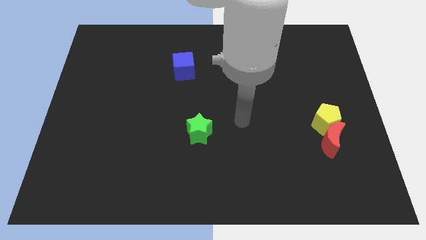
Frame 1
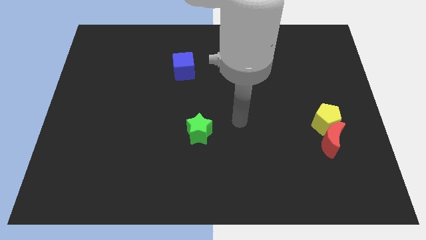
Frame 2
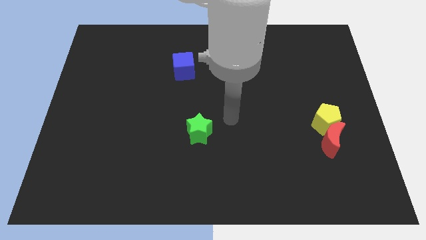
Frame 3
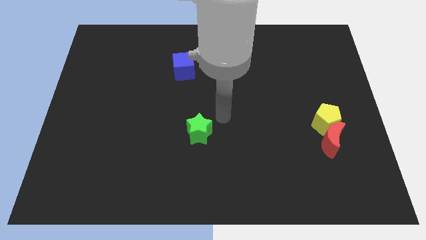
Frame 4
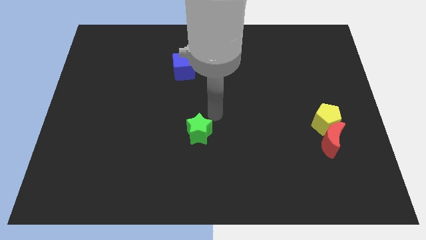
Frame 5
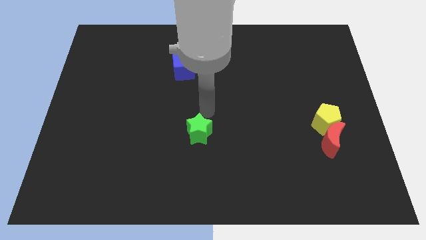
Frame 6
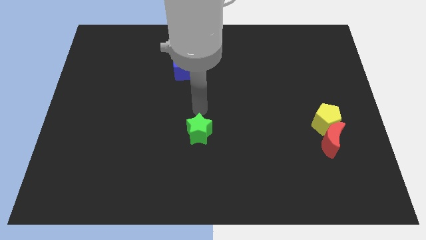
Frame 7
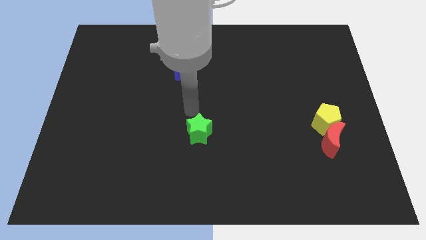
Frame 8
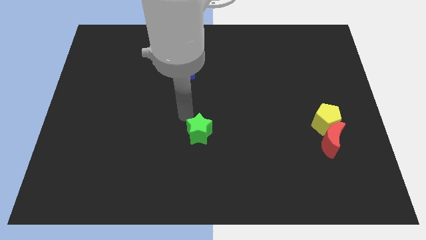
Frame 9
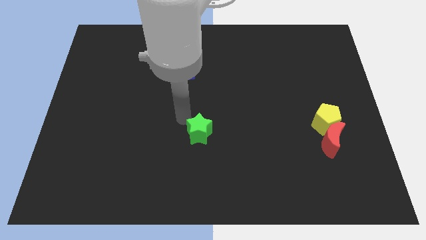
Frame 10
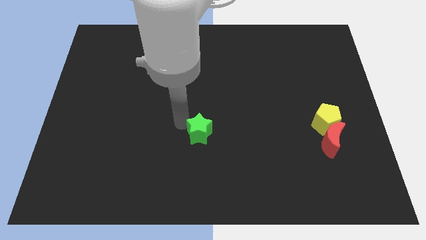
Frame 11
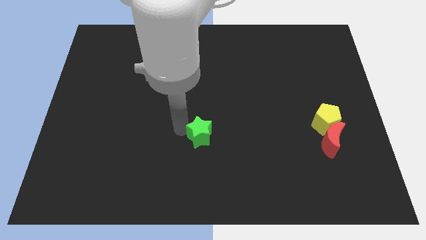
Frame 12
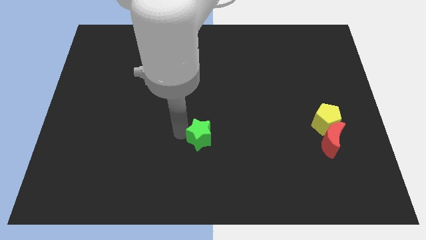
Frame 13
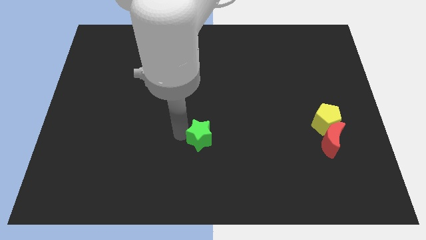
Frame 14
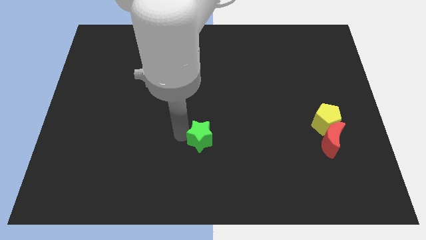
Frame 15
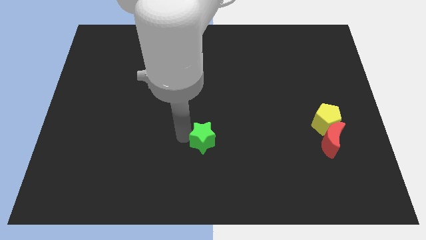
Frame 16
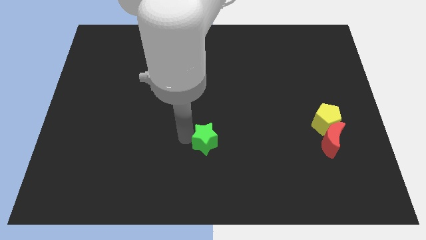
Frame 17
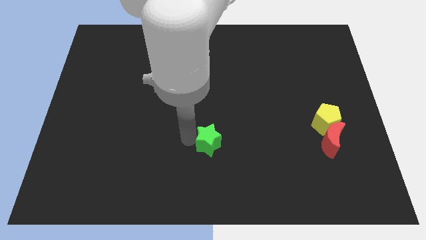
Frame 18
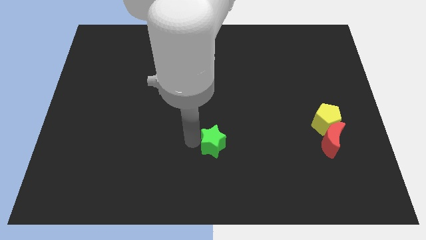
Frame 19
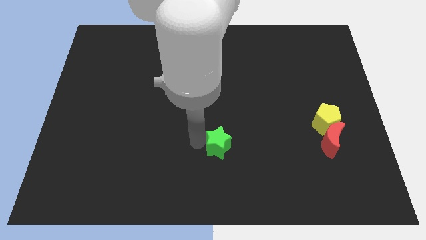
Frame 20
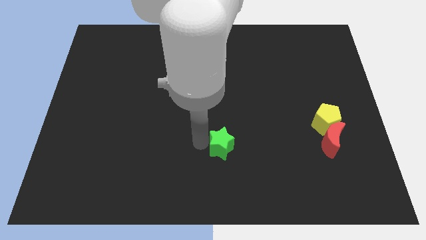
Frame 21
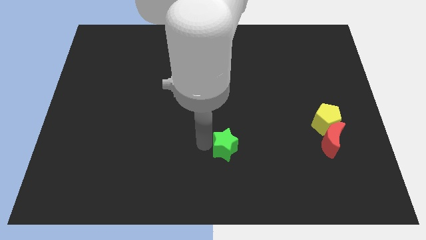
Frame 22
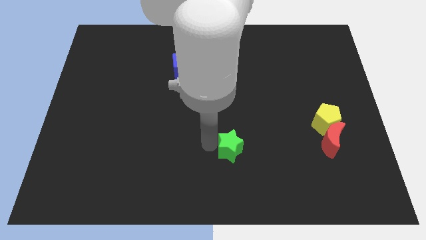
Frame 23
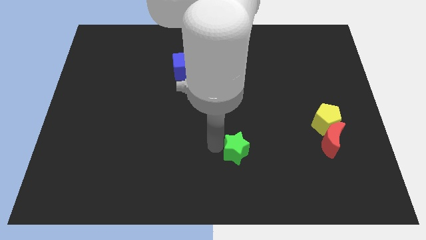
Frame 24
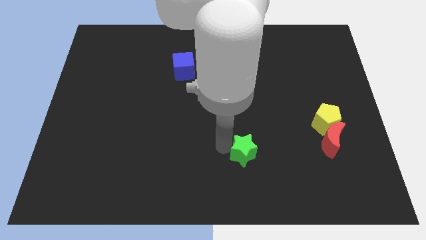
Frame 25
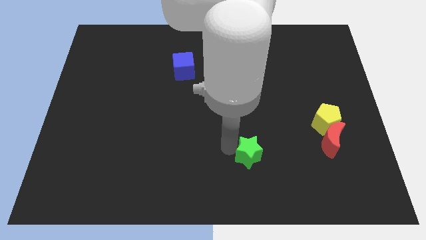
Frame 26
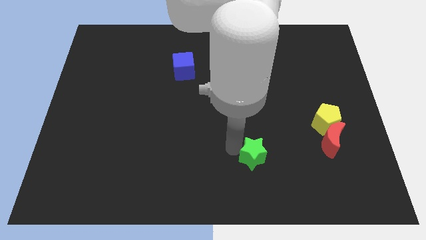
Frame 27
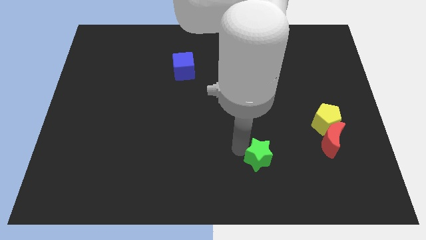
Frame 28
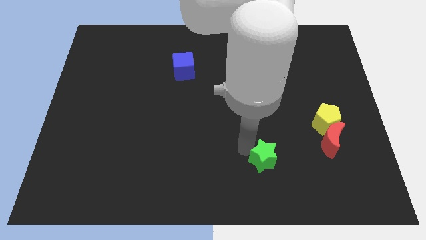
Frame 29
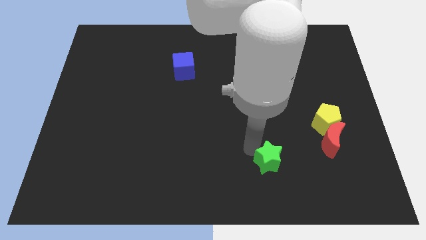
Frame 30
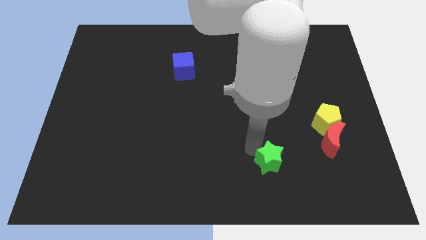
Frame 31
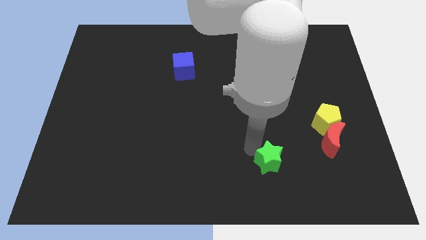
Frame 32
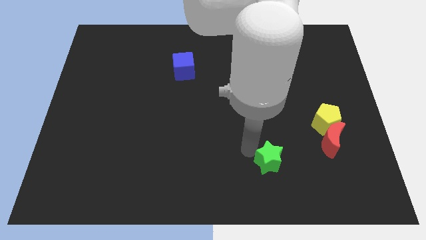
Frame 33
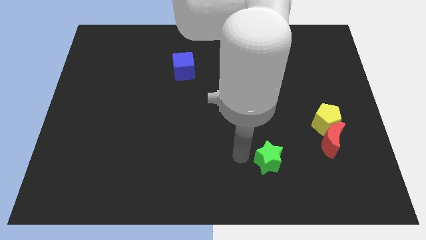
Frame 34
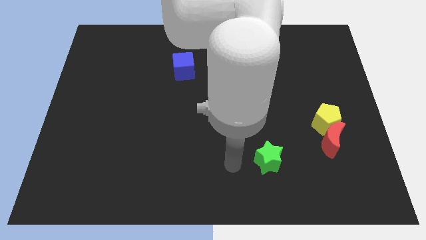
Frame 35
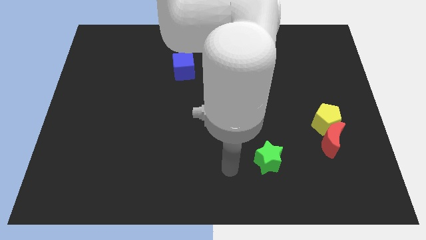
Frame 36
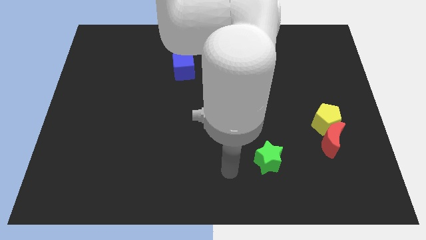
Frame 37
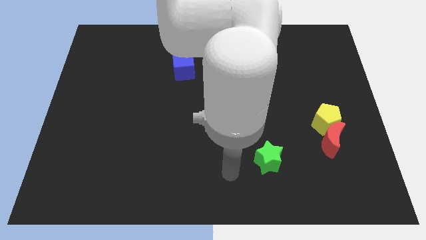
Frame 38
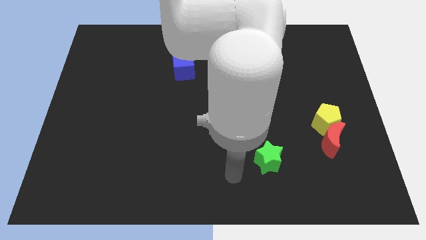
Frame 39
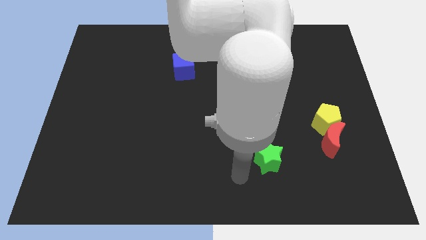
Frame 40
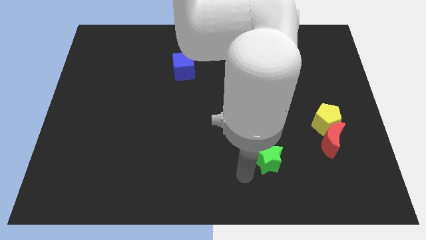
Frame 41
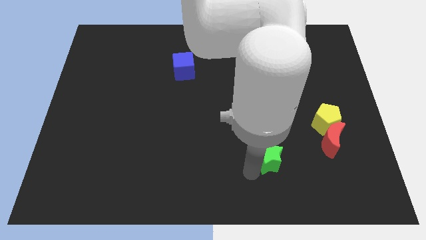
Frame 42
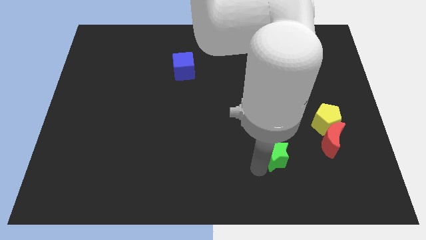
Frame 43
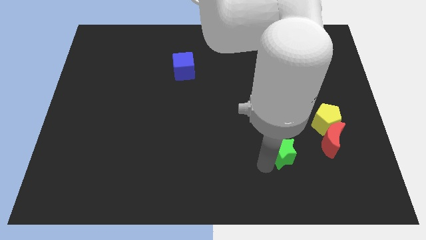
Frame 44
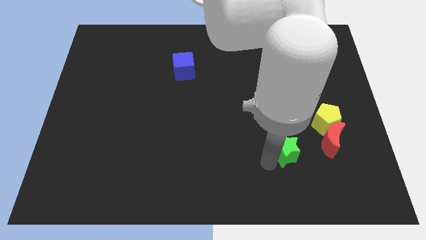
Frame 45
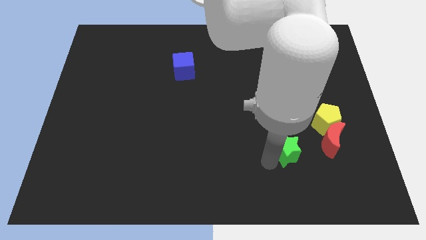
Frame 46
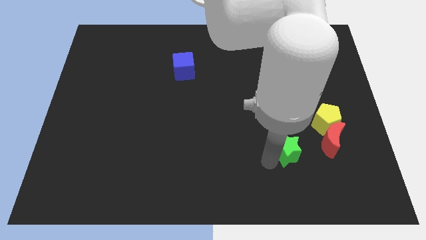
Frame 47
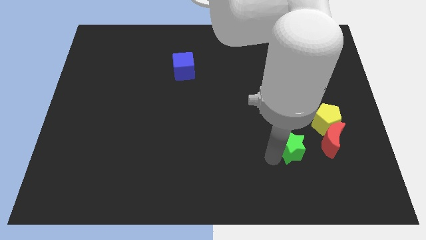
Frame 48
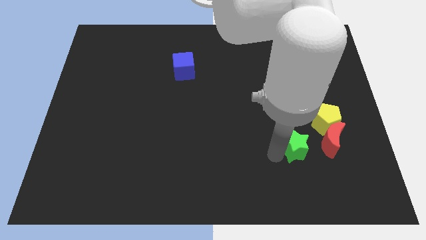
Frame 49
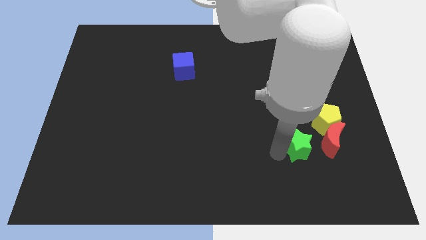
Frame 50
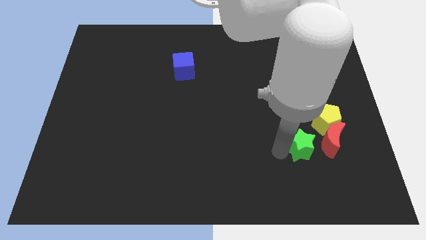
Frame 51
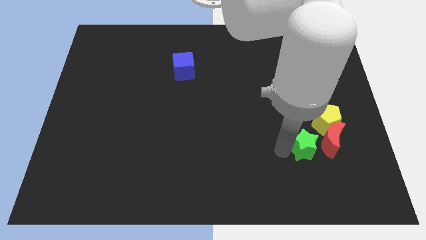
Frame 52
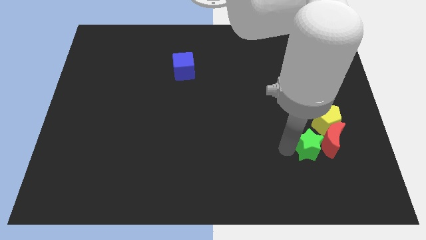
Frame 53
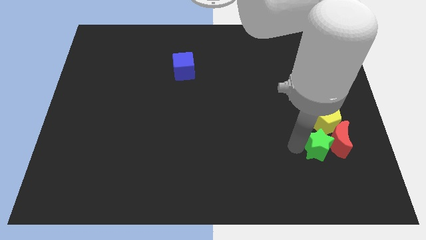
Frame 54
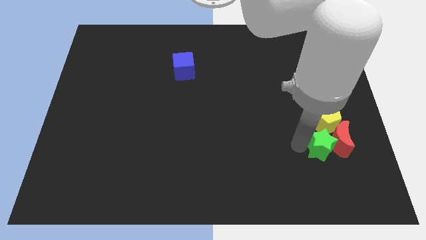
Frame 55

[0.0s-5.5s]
put the star towards the red block

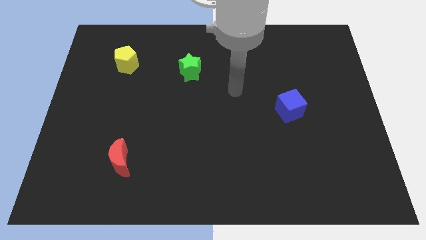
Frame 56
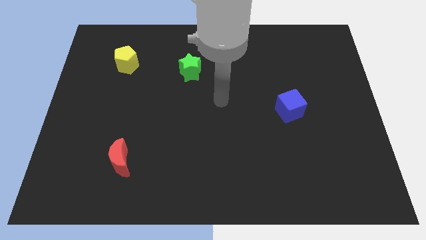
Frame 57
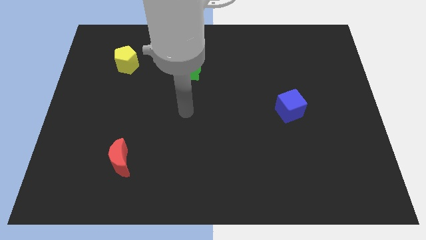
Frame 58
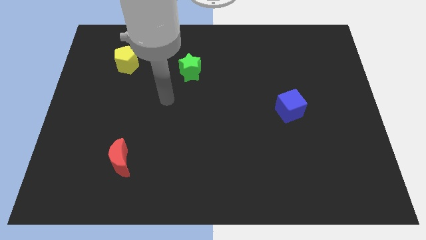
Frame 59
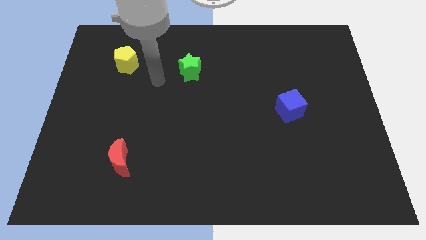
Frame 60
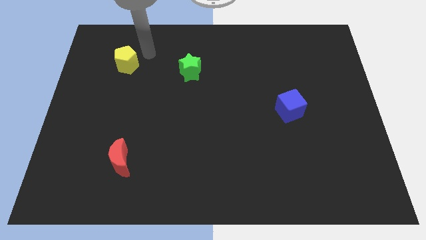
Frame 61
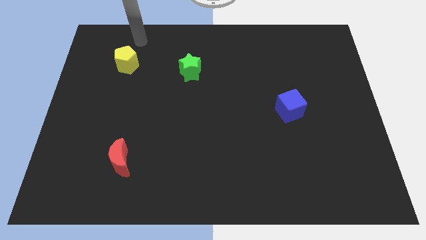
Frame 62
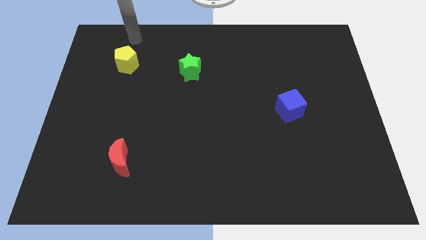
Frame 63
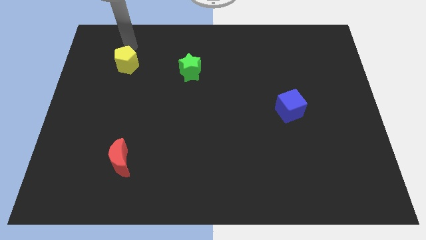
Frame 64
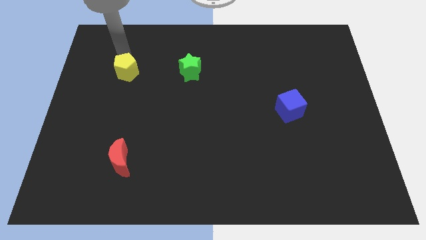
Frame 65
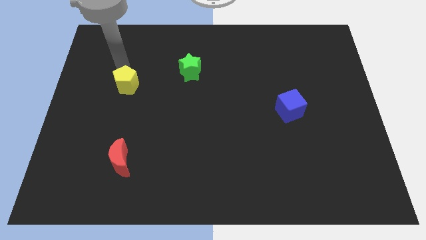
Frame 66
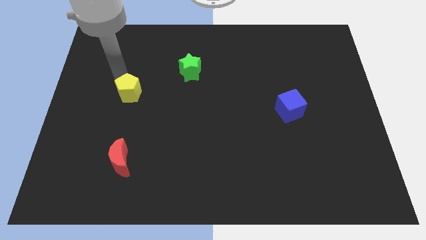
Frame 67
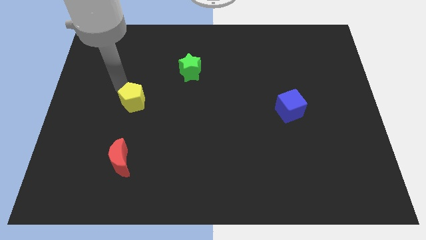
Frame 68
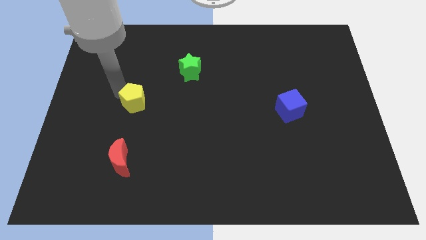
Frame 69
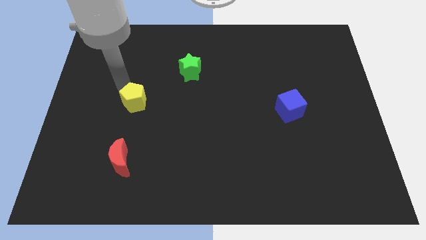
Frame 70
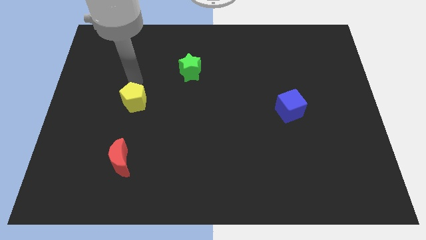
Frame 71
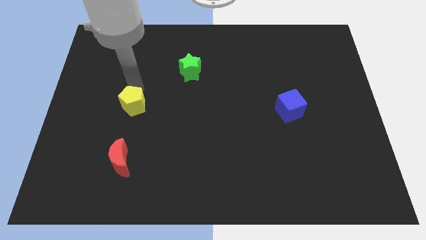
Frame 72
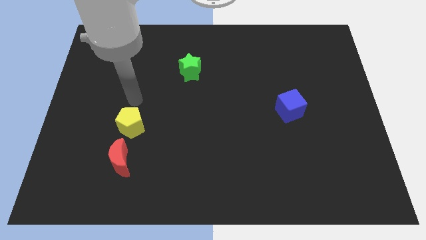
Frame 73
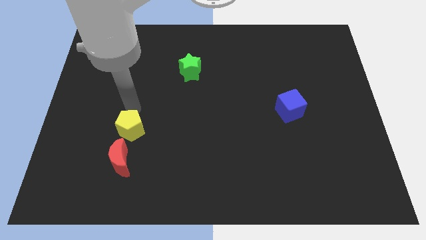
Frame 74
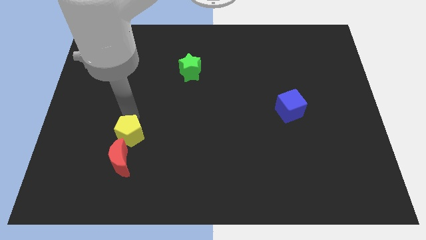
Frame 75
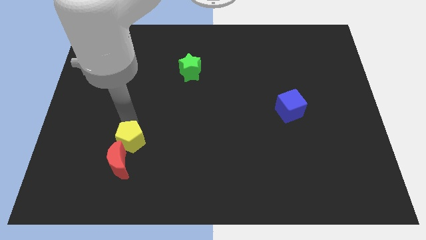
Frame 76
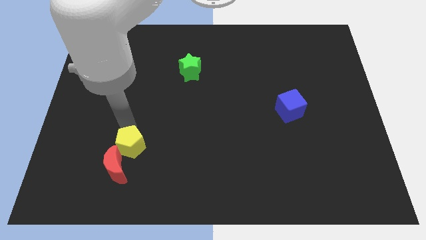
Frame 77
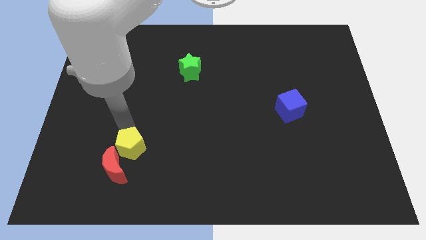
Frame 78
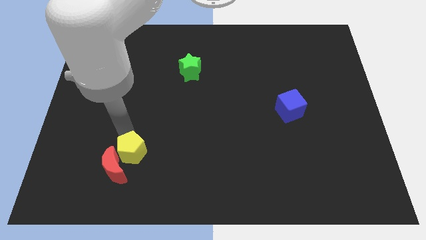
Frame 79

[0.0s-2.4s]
move the yellow pentagon close to the moon

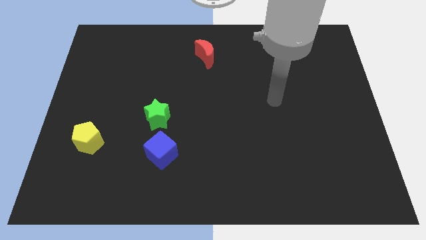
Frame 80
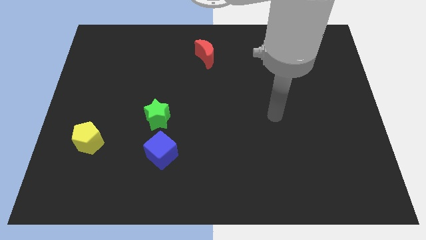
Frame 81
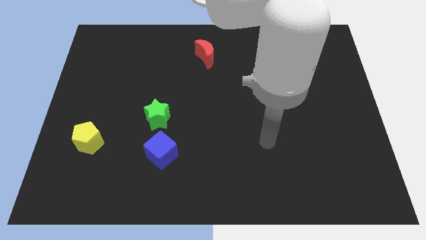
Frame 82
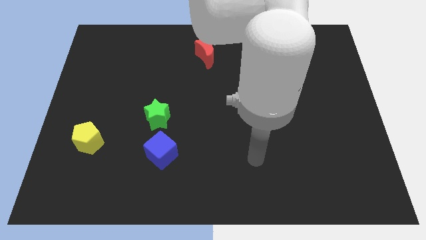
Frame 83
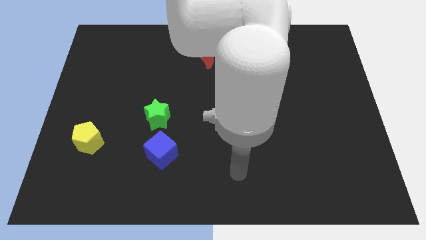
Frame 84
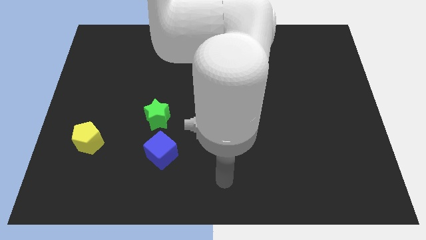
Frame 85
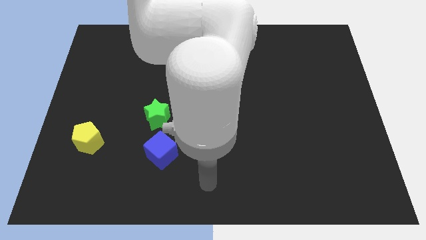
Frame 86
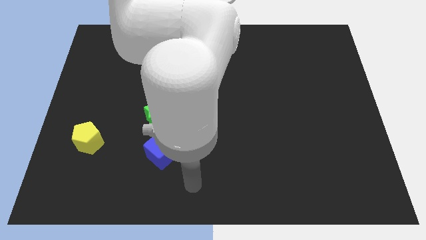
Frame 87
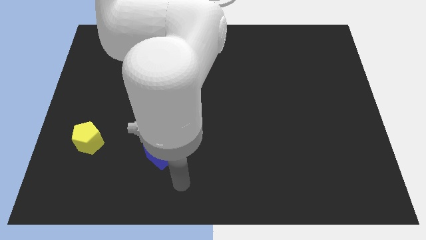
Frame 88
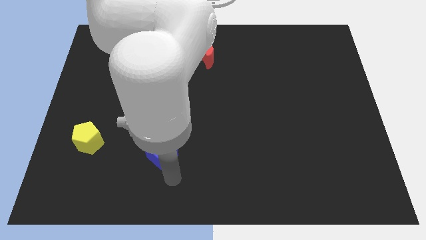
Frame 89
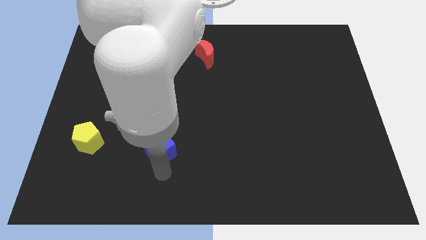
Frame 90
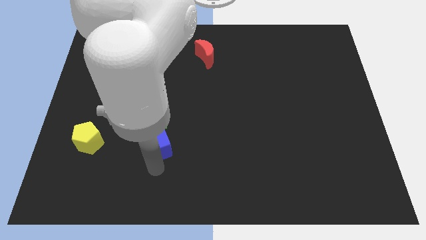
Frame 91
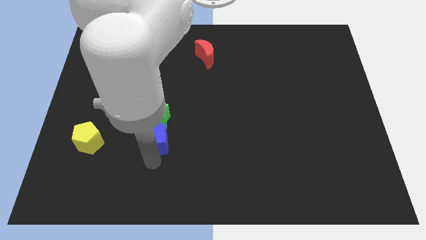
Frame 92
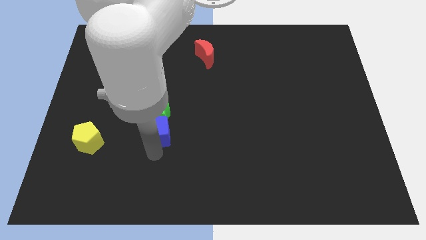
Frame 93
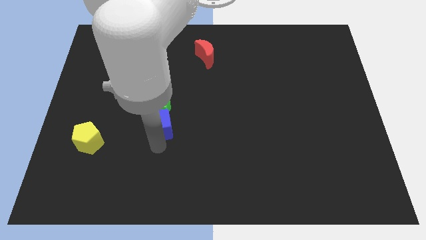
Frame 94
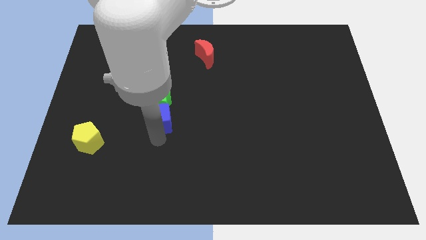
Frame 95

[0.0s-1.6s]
move the cube to the green star
